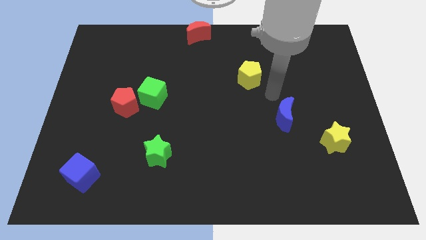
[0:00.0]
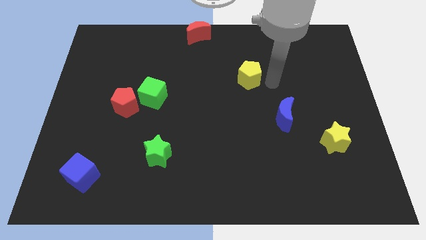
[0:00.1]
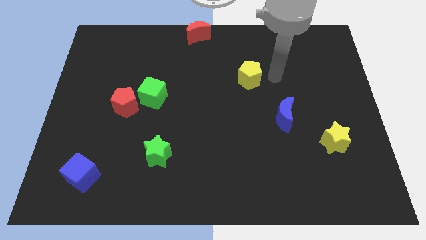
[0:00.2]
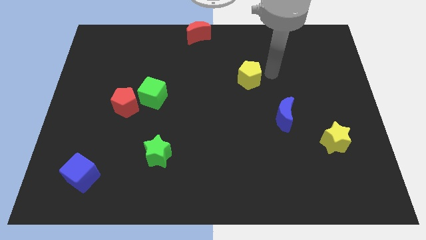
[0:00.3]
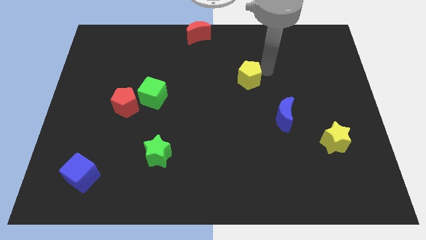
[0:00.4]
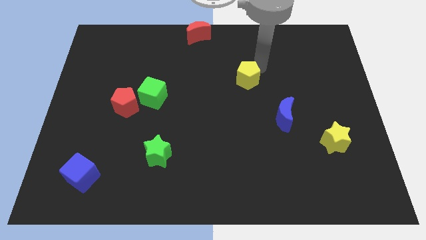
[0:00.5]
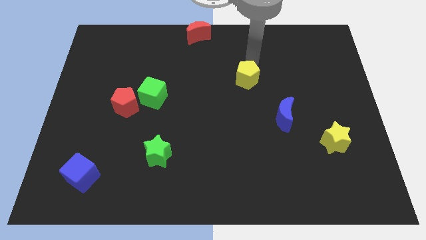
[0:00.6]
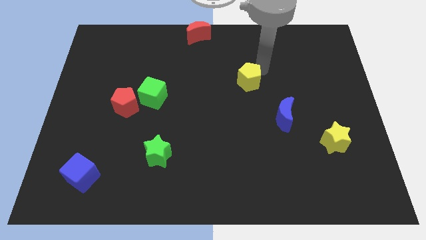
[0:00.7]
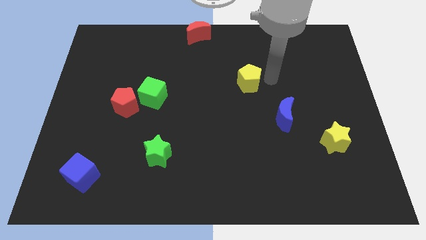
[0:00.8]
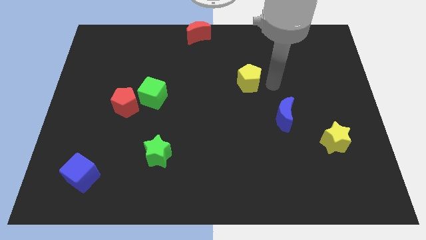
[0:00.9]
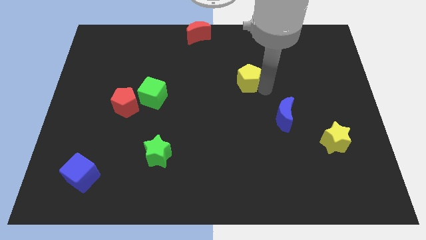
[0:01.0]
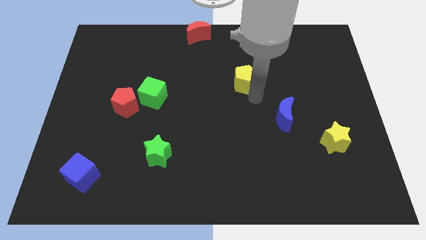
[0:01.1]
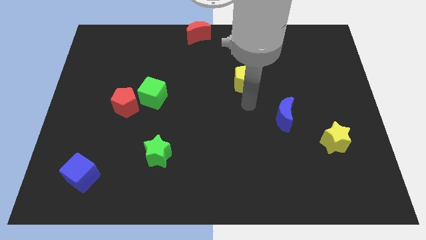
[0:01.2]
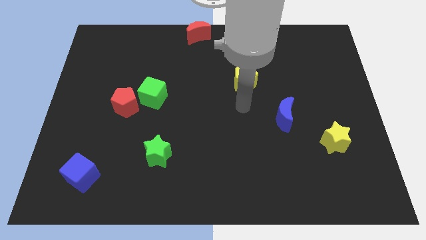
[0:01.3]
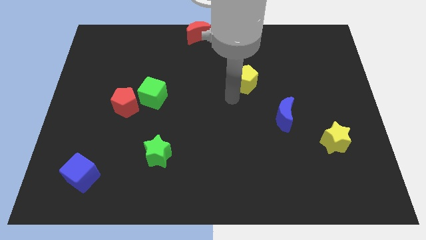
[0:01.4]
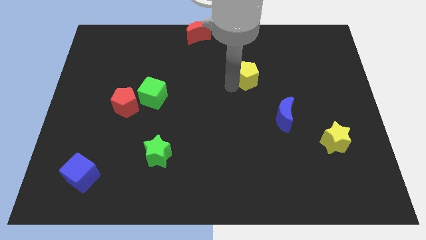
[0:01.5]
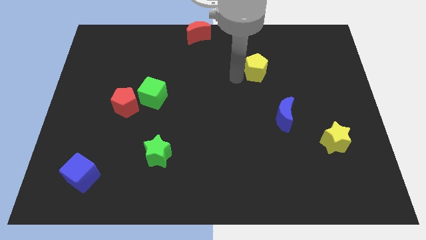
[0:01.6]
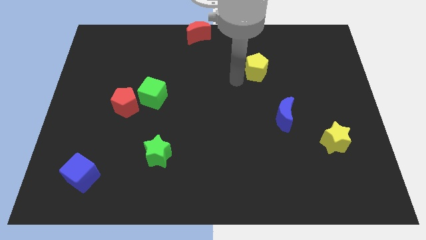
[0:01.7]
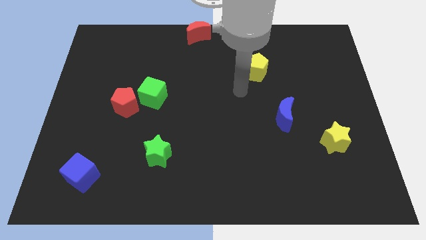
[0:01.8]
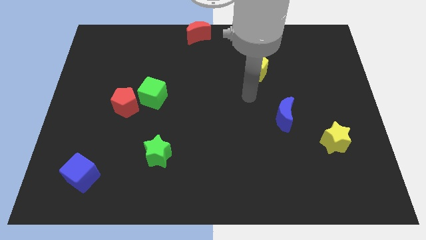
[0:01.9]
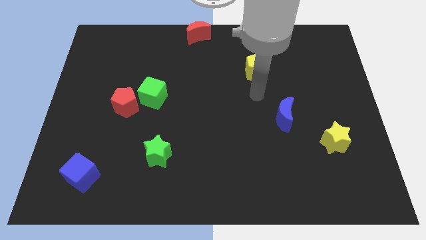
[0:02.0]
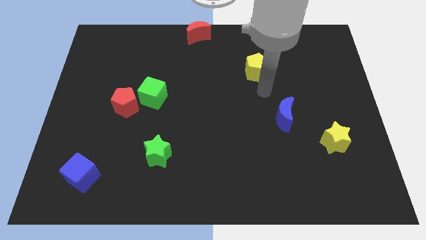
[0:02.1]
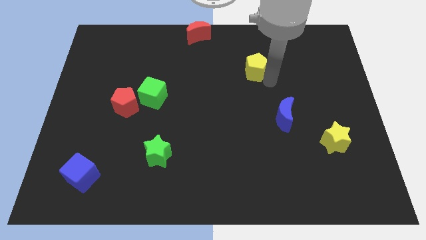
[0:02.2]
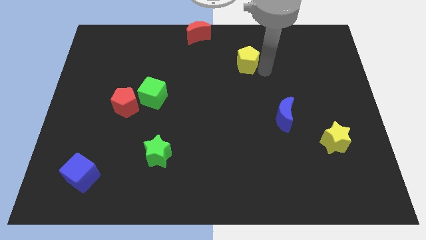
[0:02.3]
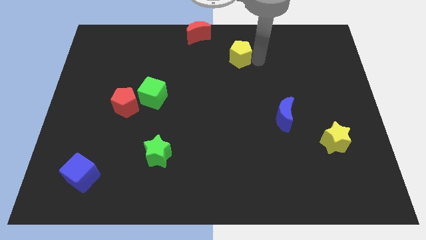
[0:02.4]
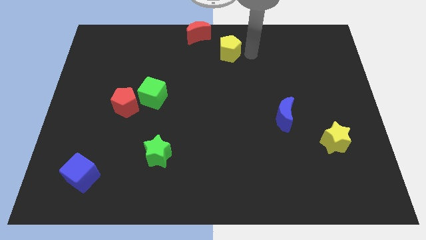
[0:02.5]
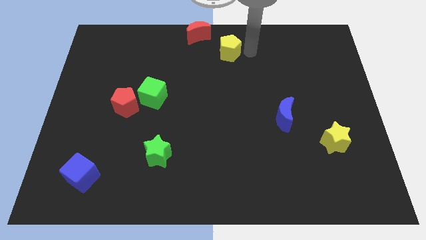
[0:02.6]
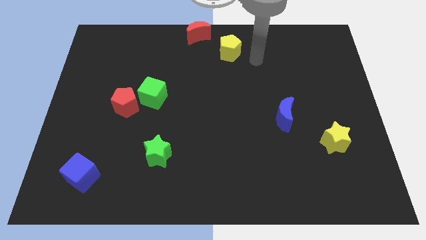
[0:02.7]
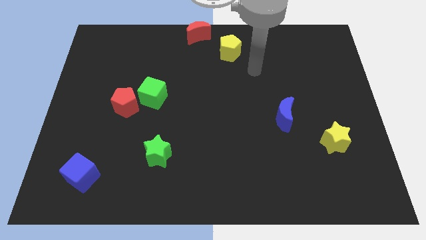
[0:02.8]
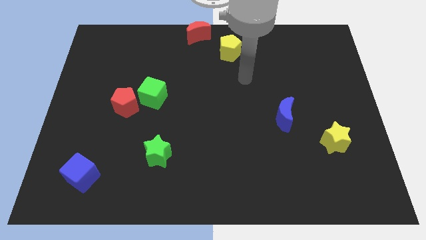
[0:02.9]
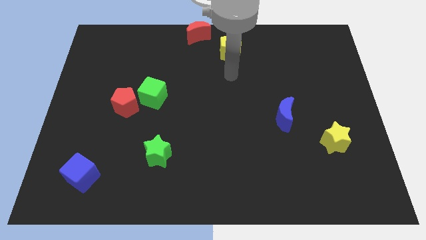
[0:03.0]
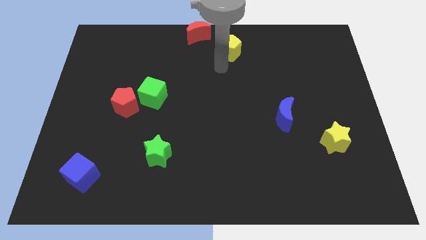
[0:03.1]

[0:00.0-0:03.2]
place the yellow pentagon diagonally bottom right to the red moon

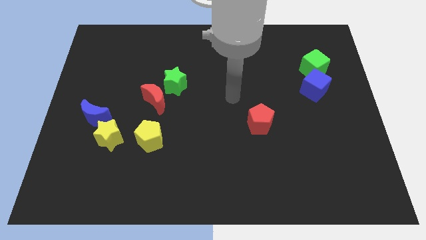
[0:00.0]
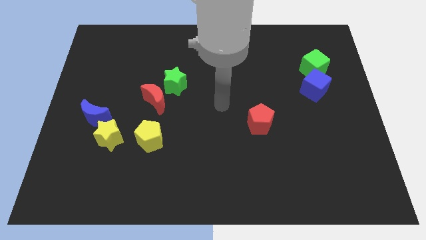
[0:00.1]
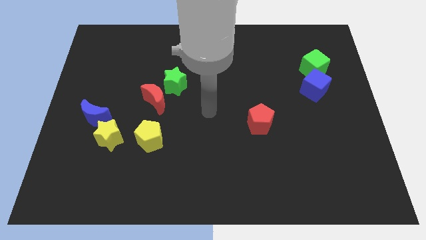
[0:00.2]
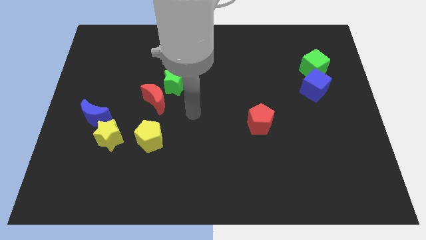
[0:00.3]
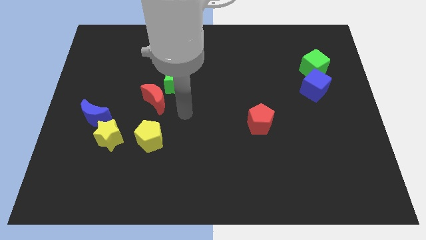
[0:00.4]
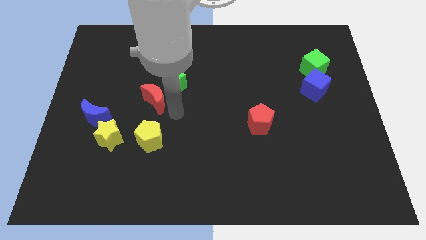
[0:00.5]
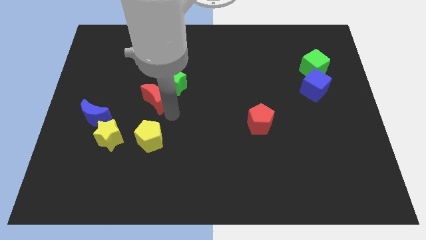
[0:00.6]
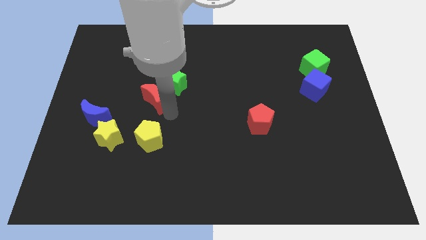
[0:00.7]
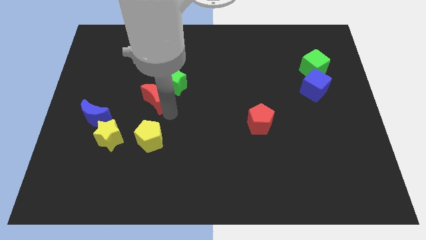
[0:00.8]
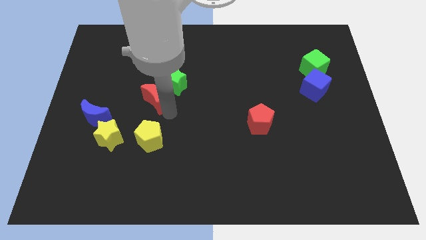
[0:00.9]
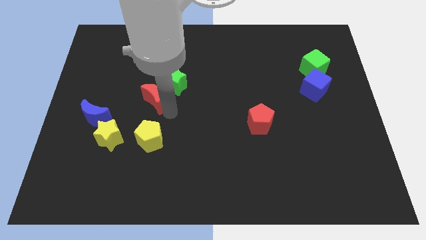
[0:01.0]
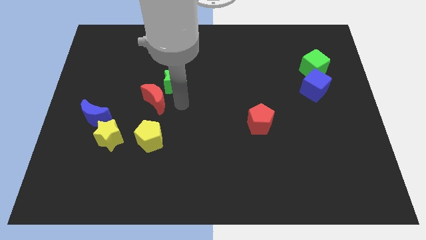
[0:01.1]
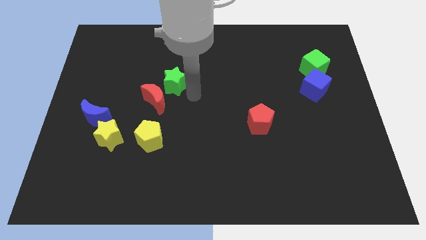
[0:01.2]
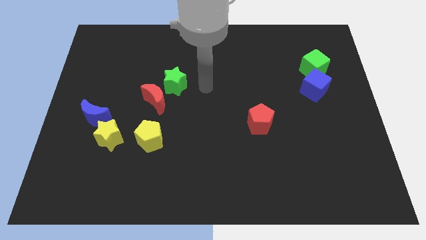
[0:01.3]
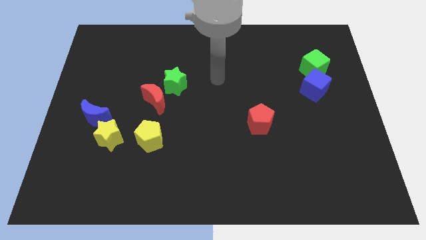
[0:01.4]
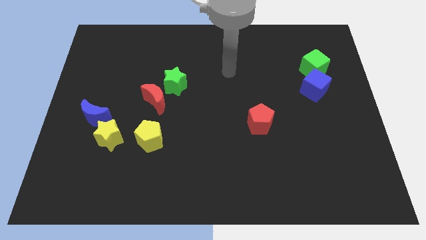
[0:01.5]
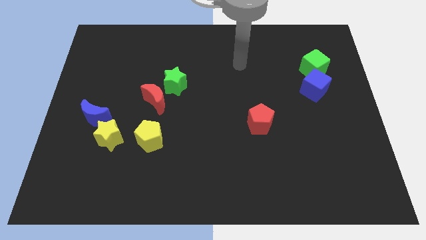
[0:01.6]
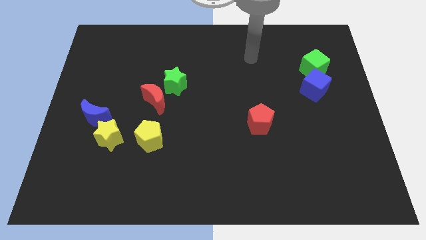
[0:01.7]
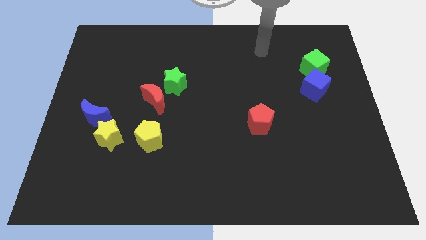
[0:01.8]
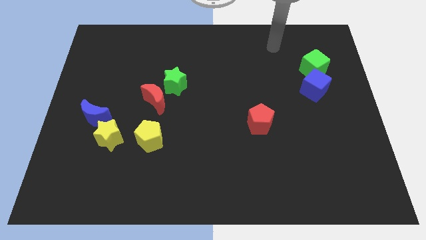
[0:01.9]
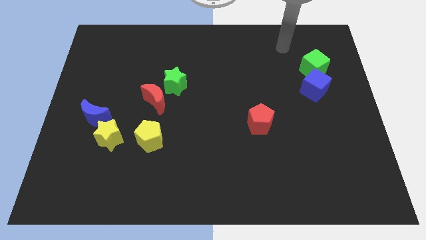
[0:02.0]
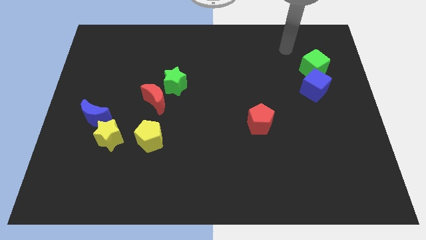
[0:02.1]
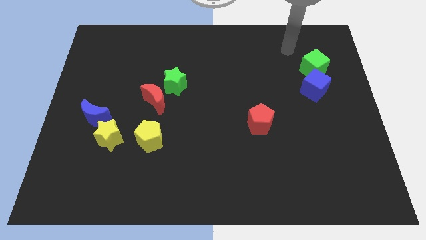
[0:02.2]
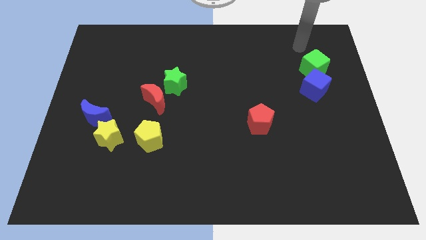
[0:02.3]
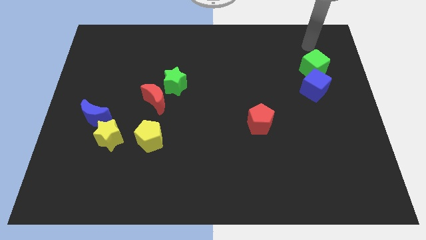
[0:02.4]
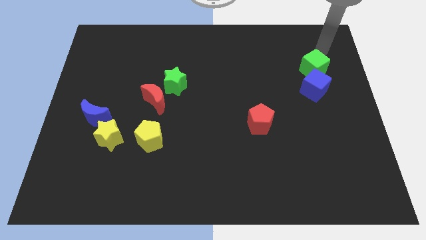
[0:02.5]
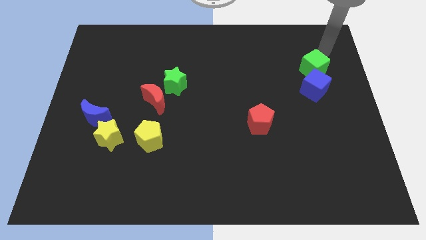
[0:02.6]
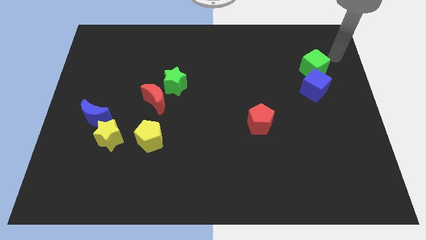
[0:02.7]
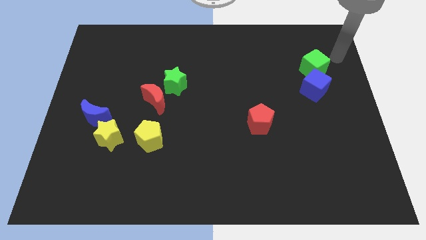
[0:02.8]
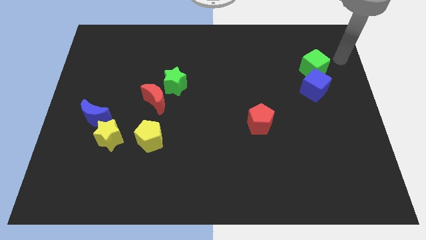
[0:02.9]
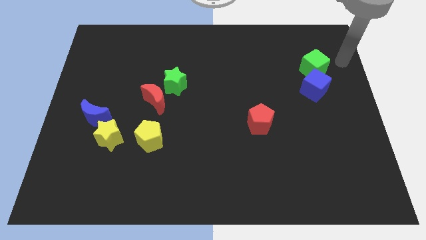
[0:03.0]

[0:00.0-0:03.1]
place your arm towards the right side of the green cube

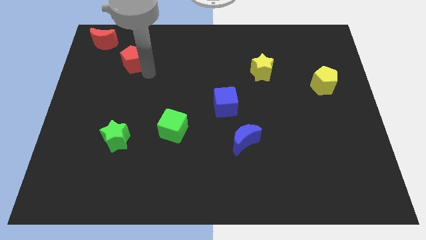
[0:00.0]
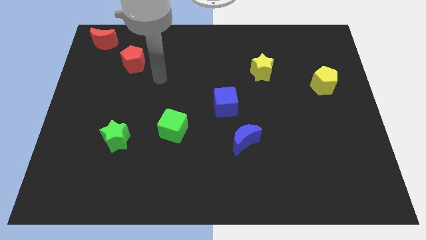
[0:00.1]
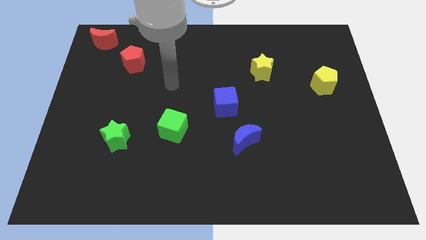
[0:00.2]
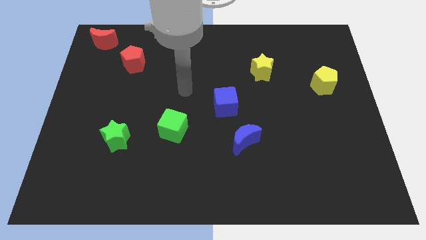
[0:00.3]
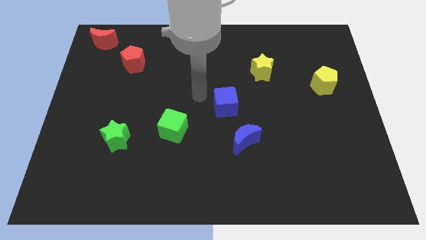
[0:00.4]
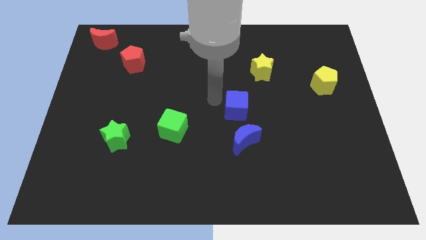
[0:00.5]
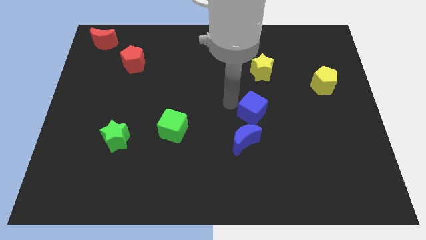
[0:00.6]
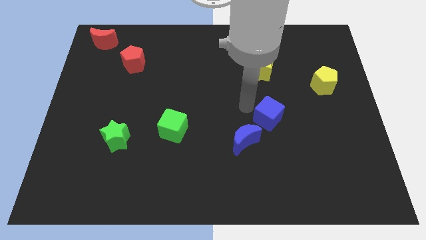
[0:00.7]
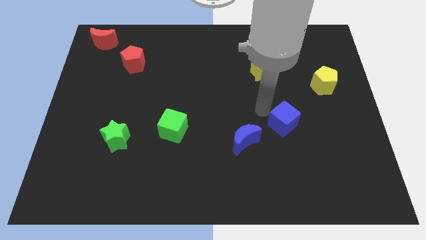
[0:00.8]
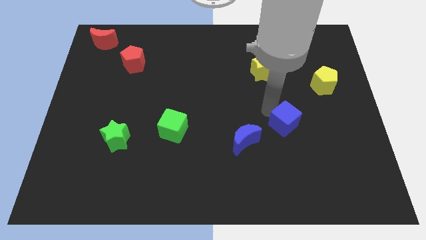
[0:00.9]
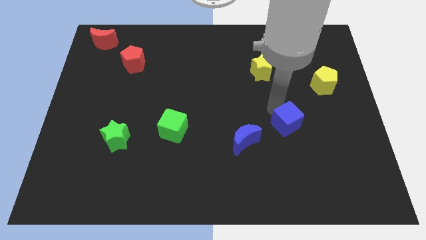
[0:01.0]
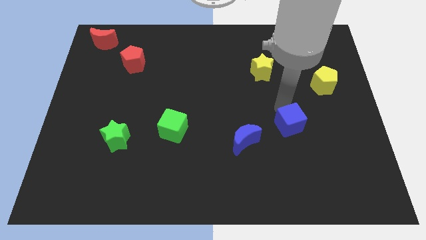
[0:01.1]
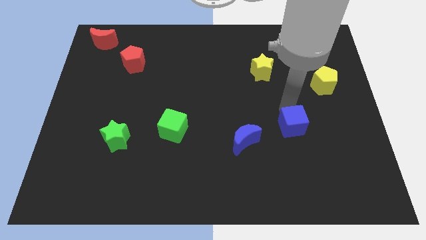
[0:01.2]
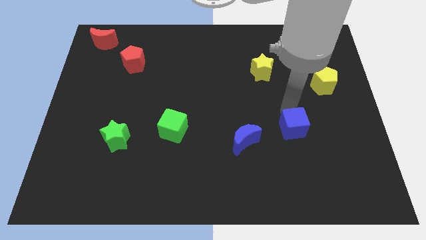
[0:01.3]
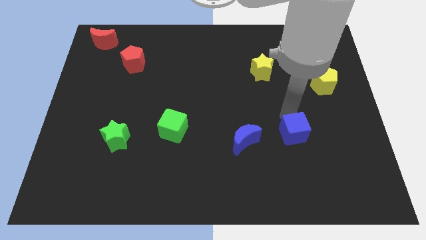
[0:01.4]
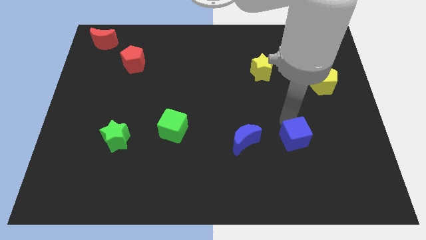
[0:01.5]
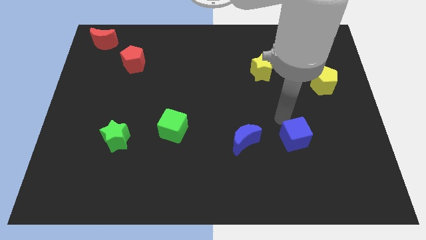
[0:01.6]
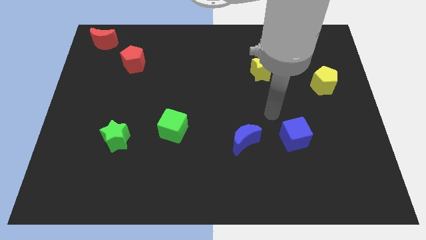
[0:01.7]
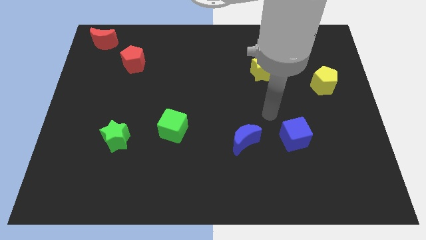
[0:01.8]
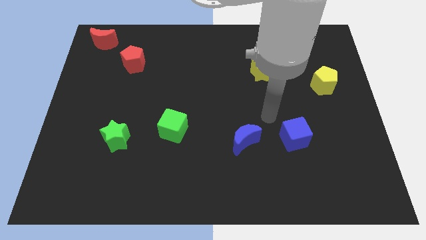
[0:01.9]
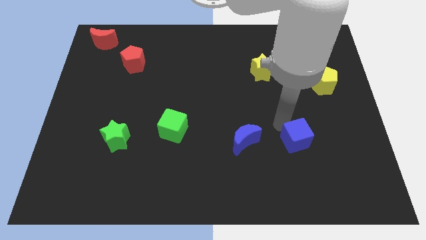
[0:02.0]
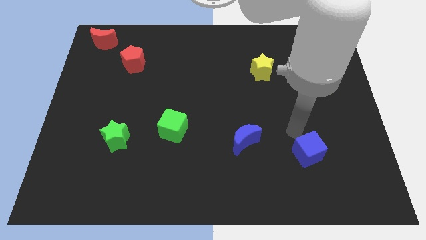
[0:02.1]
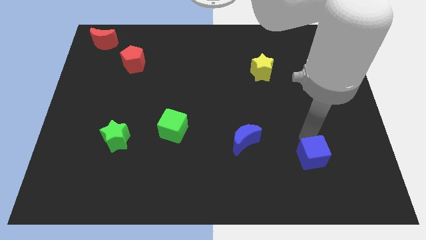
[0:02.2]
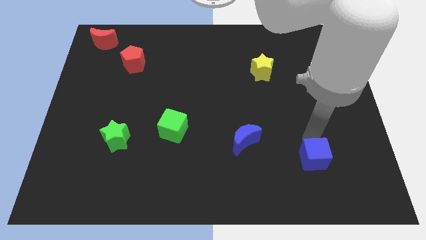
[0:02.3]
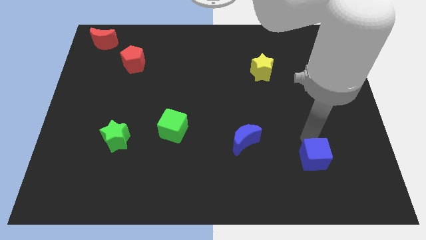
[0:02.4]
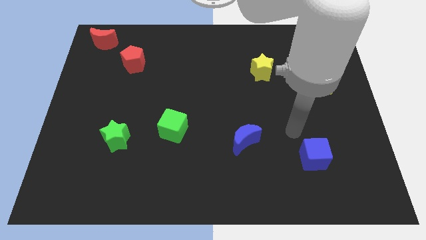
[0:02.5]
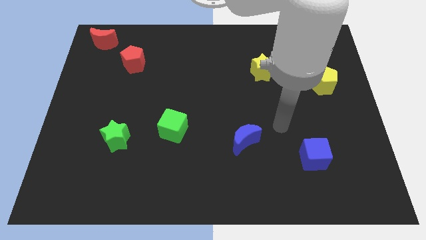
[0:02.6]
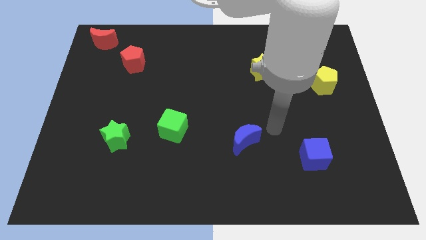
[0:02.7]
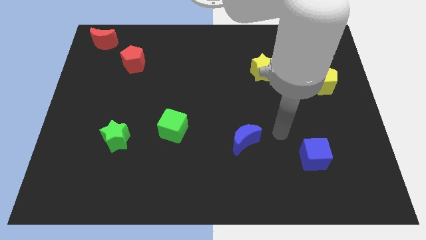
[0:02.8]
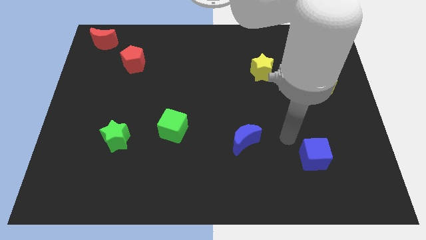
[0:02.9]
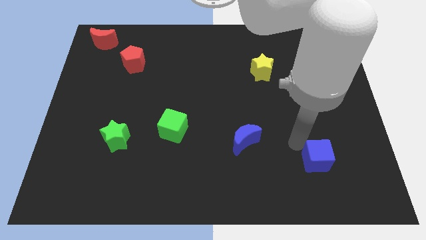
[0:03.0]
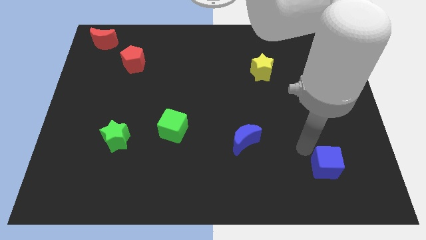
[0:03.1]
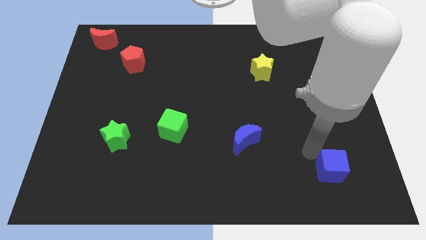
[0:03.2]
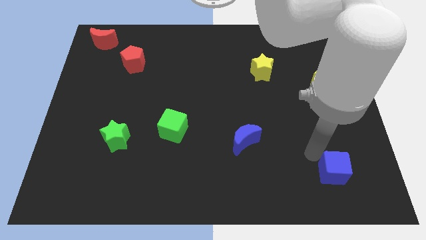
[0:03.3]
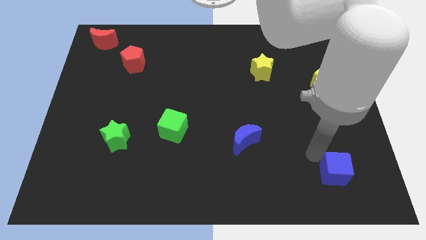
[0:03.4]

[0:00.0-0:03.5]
push the blue cube to the bottom right of the blue crescent
